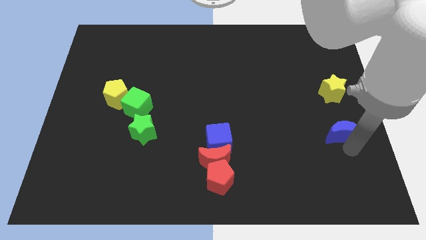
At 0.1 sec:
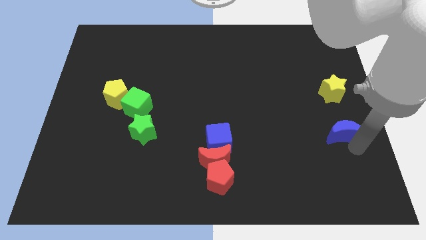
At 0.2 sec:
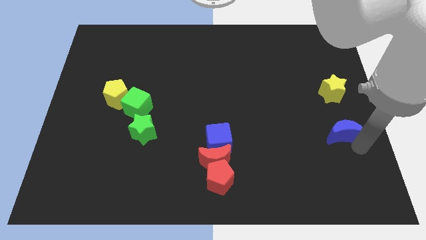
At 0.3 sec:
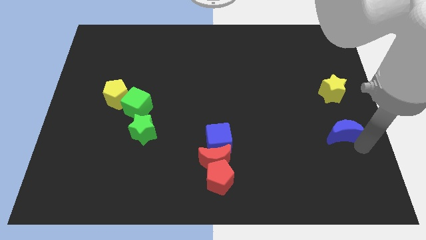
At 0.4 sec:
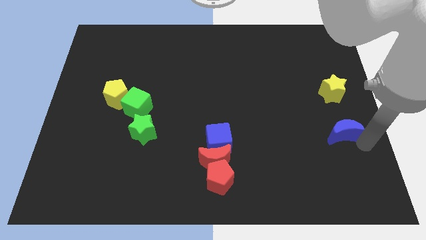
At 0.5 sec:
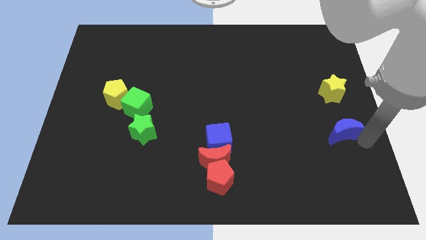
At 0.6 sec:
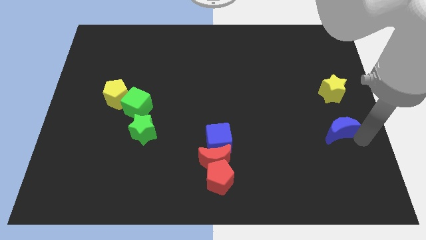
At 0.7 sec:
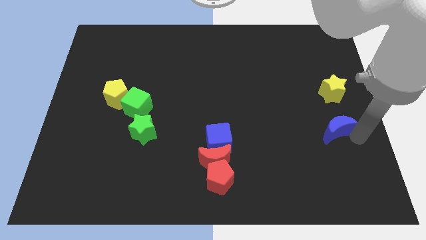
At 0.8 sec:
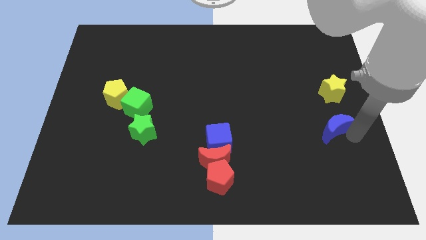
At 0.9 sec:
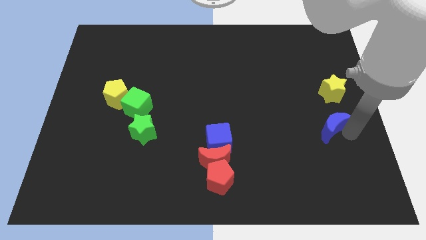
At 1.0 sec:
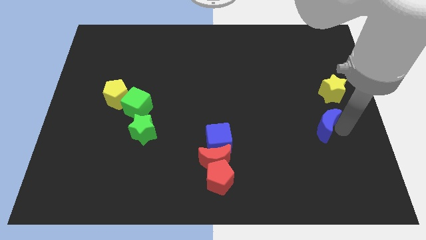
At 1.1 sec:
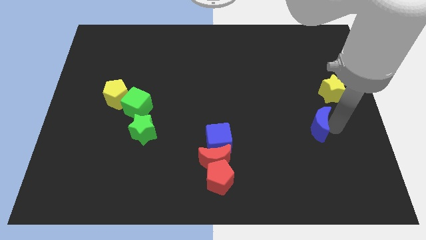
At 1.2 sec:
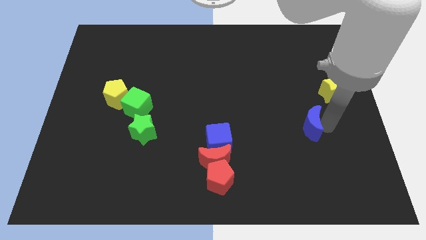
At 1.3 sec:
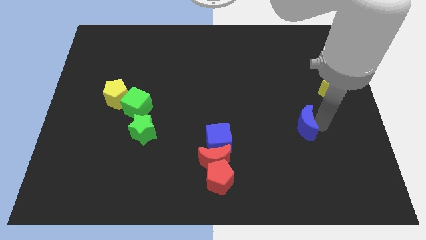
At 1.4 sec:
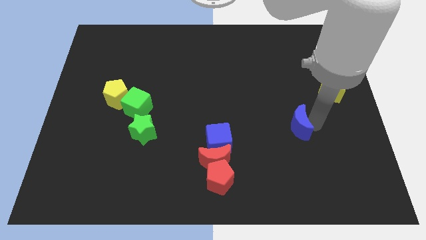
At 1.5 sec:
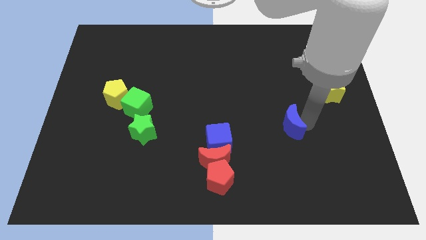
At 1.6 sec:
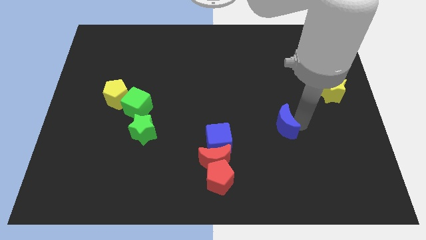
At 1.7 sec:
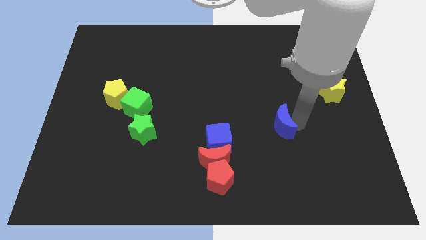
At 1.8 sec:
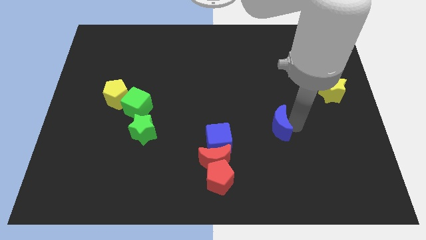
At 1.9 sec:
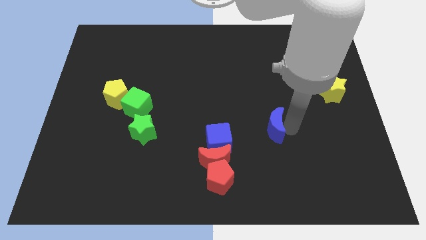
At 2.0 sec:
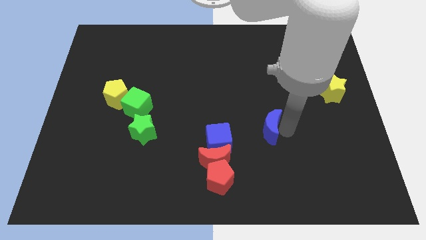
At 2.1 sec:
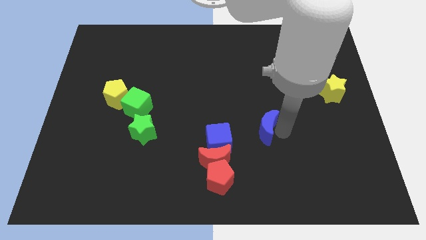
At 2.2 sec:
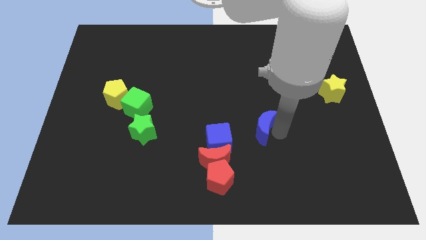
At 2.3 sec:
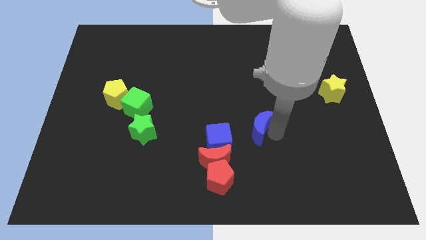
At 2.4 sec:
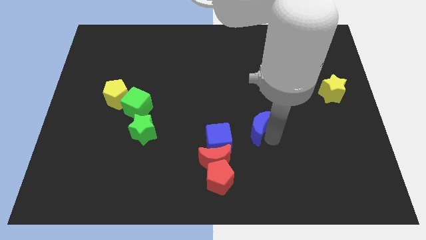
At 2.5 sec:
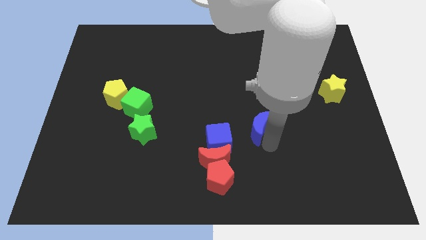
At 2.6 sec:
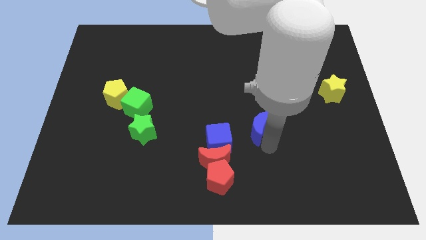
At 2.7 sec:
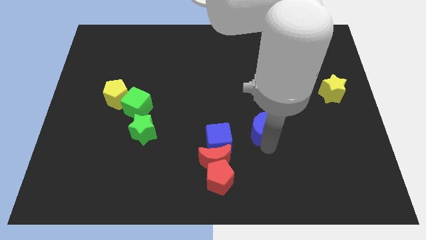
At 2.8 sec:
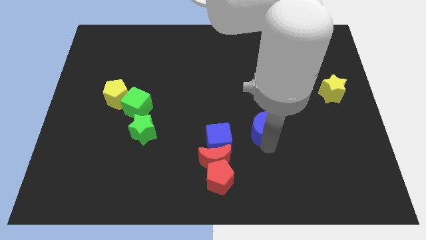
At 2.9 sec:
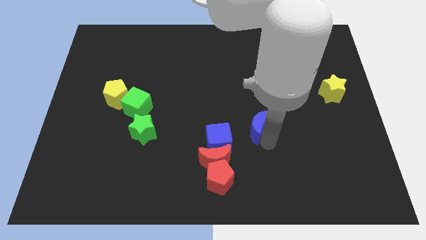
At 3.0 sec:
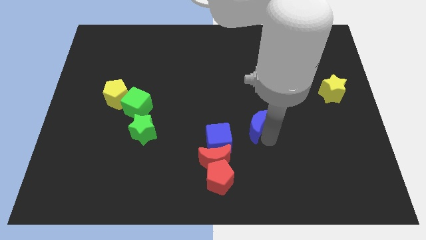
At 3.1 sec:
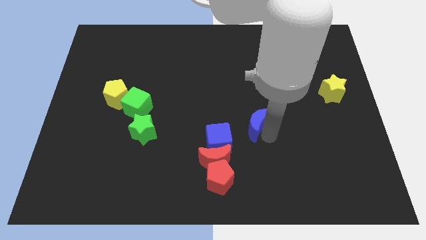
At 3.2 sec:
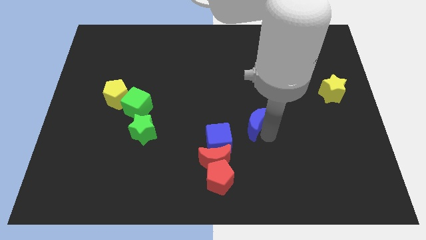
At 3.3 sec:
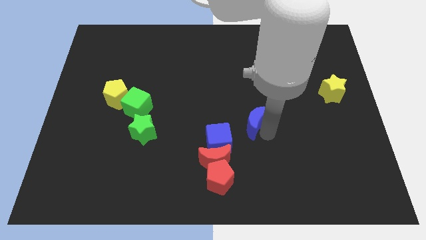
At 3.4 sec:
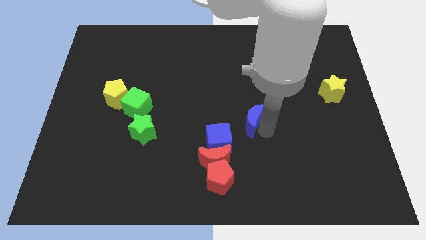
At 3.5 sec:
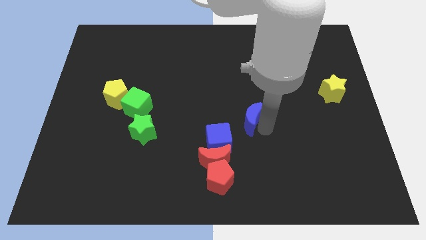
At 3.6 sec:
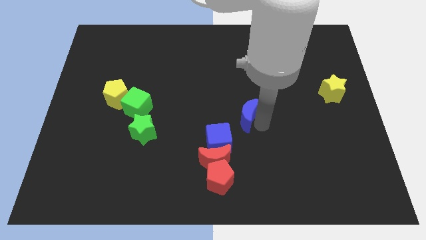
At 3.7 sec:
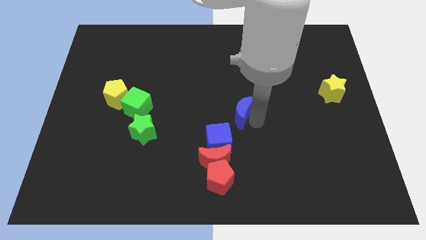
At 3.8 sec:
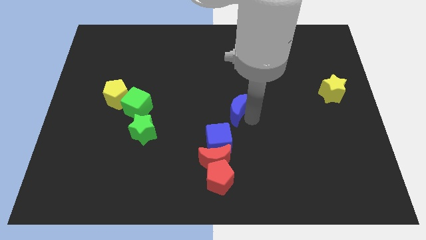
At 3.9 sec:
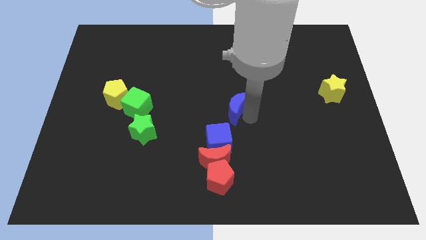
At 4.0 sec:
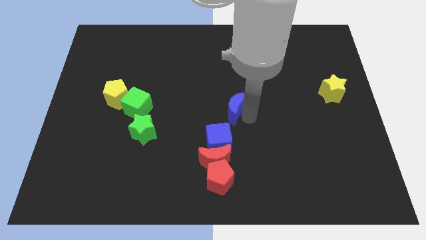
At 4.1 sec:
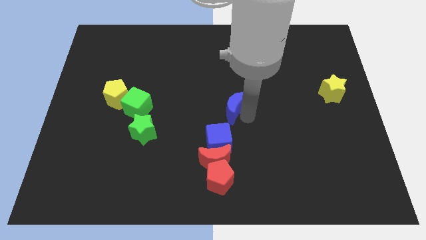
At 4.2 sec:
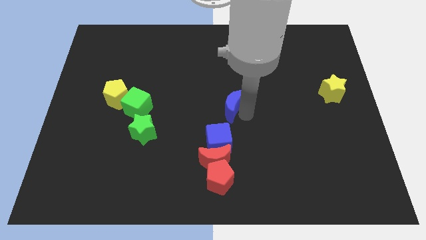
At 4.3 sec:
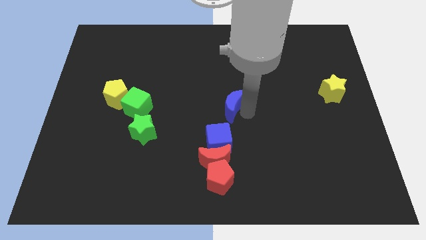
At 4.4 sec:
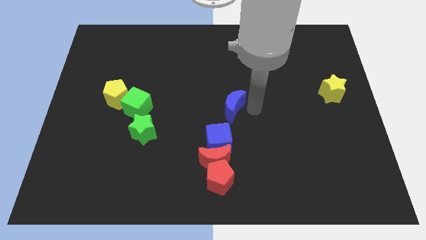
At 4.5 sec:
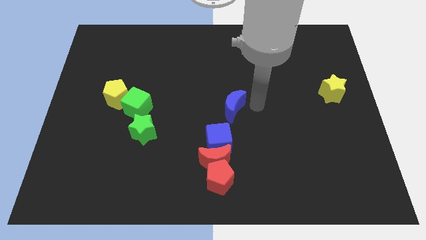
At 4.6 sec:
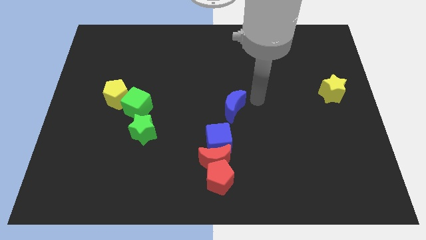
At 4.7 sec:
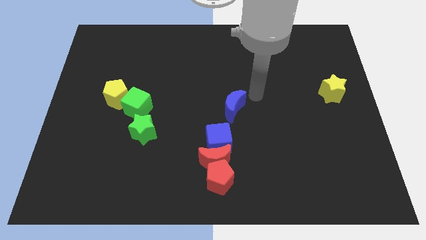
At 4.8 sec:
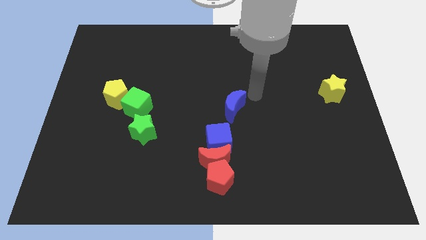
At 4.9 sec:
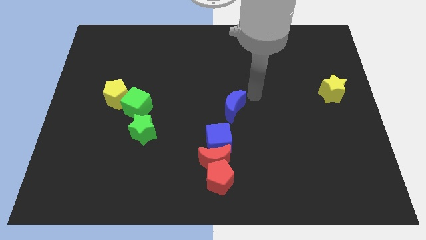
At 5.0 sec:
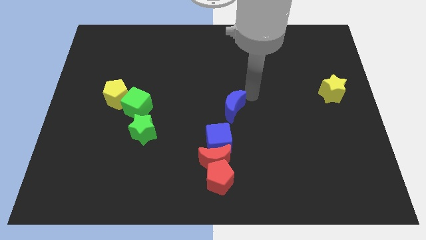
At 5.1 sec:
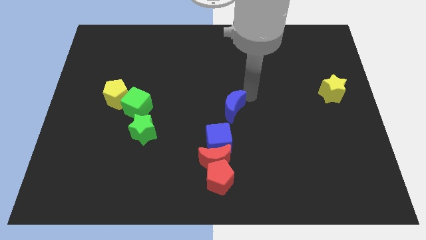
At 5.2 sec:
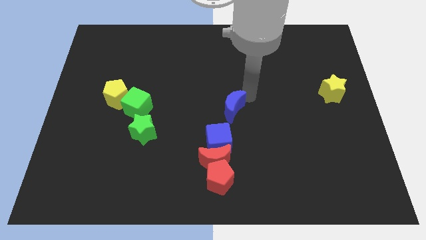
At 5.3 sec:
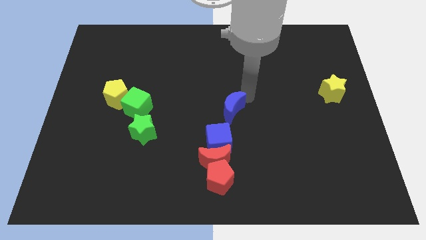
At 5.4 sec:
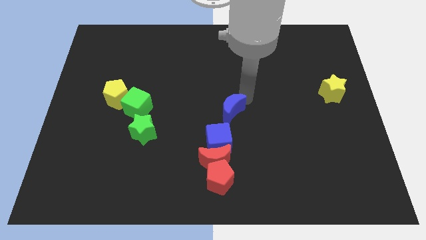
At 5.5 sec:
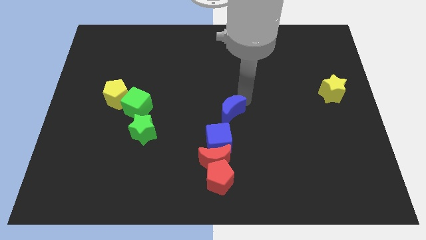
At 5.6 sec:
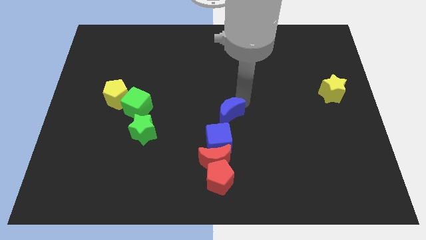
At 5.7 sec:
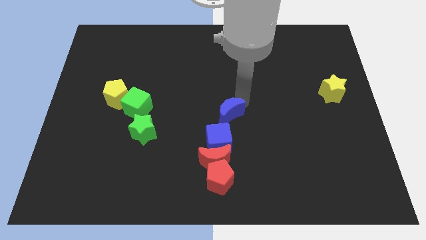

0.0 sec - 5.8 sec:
place blue moon to the top of the blue cube

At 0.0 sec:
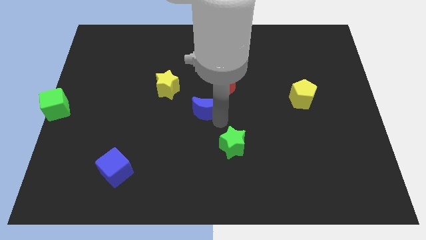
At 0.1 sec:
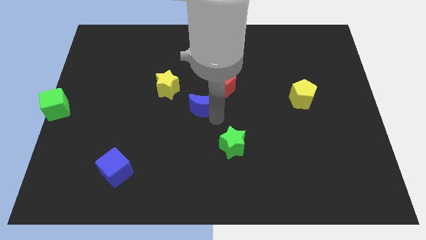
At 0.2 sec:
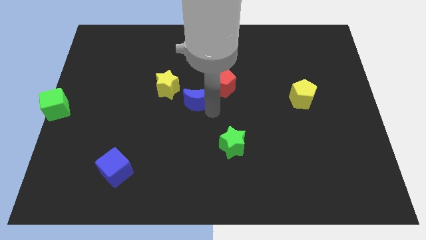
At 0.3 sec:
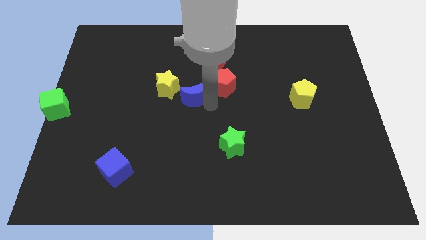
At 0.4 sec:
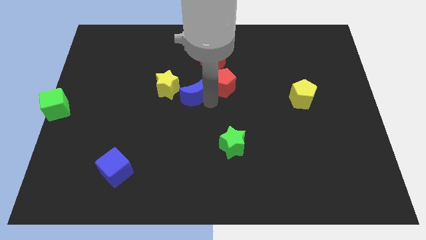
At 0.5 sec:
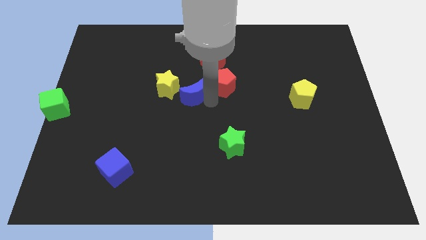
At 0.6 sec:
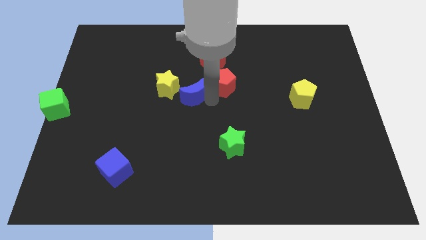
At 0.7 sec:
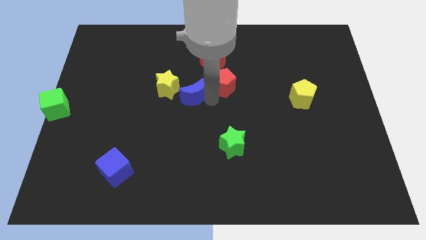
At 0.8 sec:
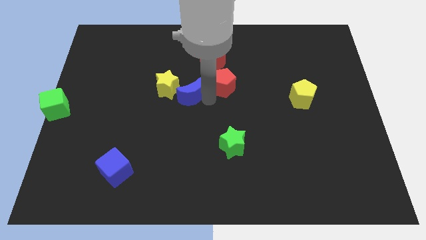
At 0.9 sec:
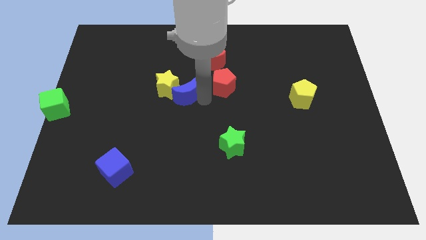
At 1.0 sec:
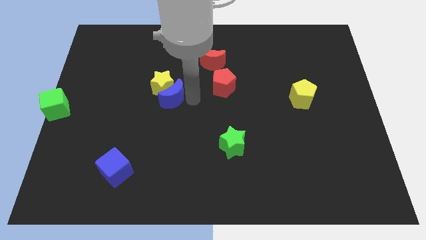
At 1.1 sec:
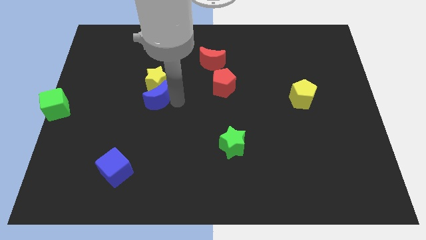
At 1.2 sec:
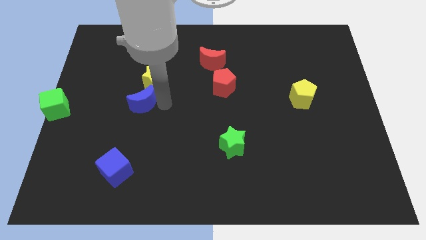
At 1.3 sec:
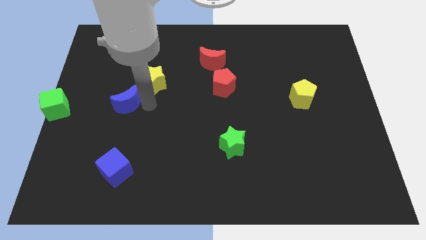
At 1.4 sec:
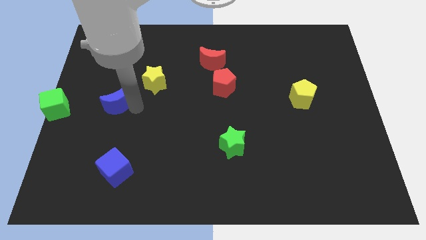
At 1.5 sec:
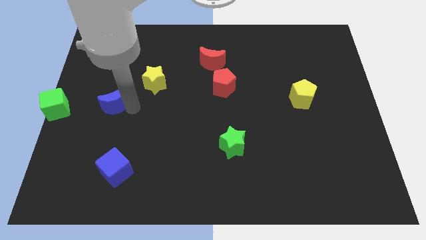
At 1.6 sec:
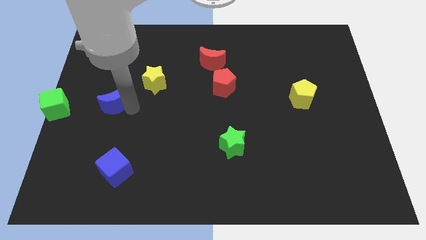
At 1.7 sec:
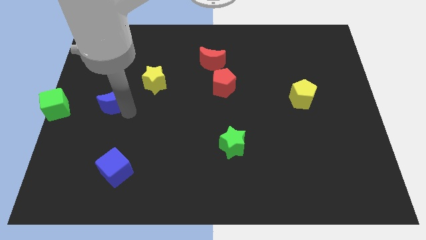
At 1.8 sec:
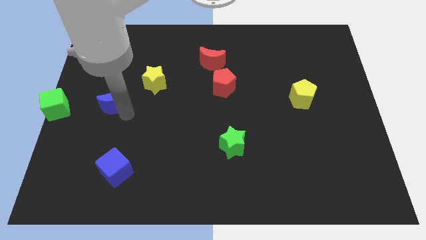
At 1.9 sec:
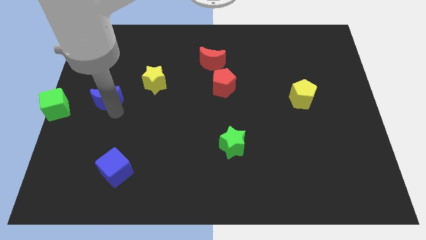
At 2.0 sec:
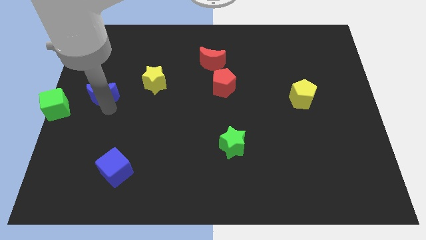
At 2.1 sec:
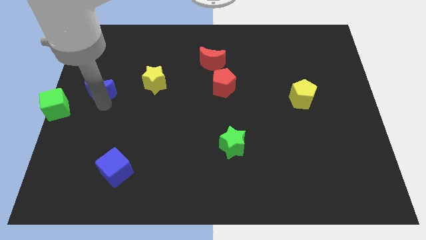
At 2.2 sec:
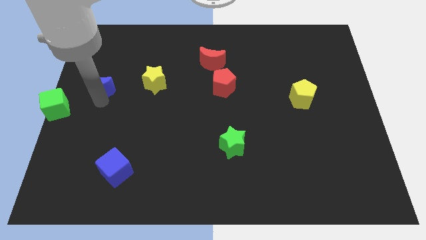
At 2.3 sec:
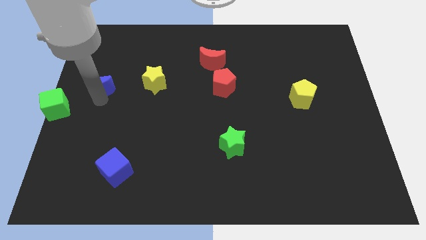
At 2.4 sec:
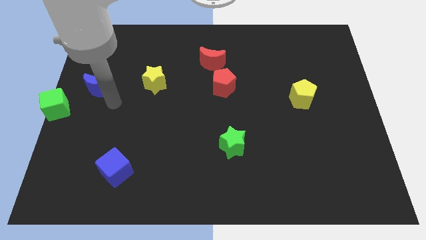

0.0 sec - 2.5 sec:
place the blue moon between the yellow star and green cube

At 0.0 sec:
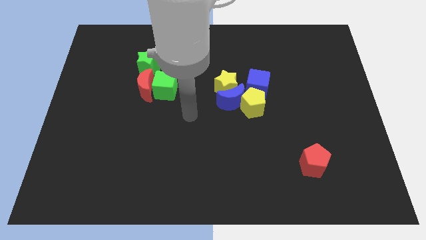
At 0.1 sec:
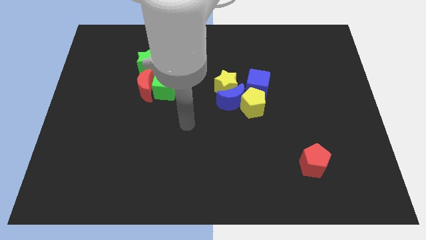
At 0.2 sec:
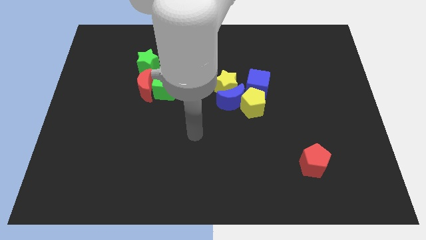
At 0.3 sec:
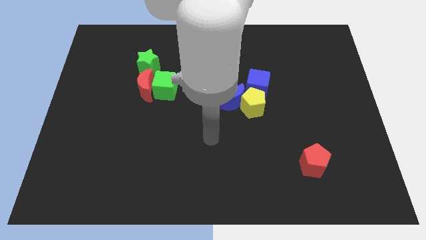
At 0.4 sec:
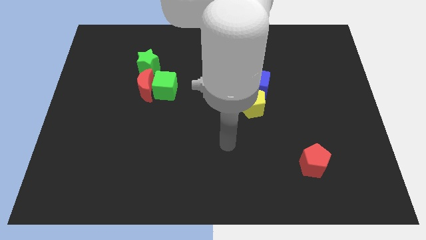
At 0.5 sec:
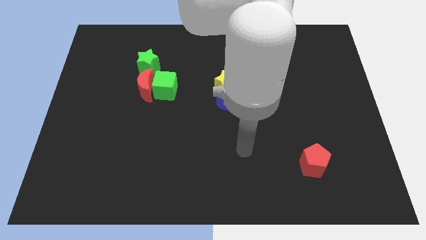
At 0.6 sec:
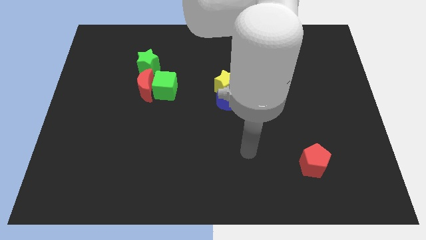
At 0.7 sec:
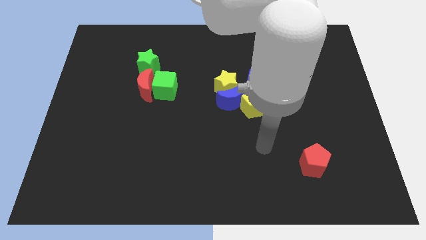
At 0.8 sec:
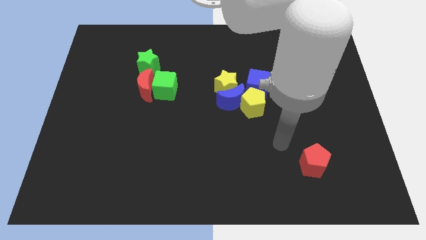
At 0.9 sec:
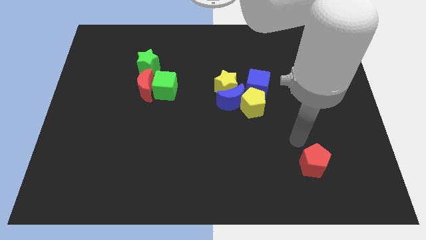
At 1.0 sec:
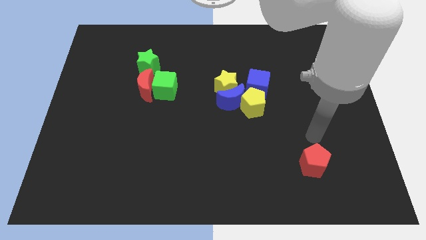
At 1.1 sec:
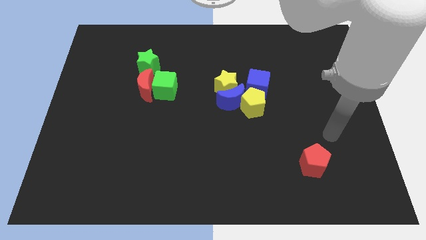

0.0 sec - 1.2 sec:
move the arm to the top of the red pentagon
